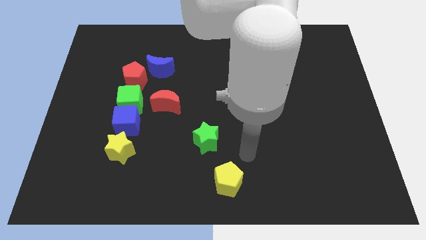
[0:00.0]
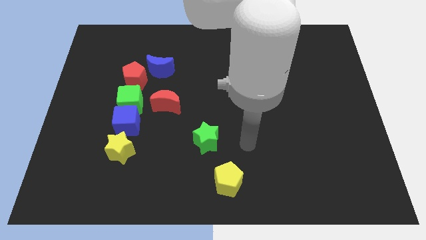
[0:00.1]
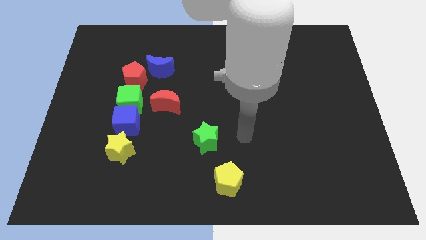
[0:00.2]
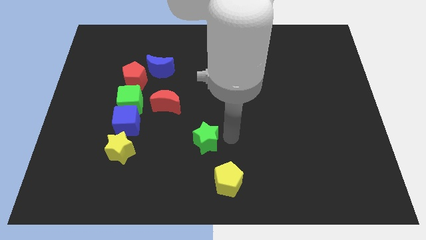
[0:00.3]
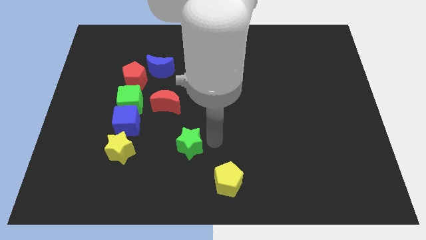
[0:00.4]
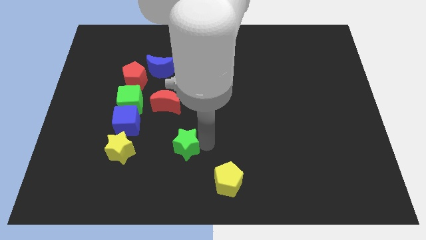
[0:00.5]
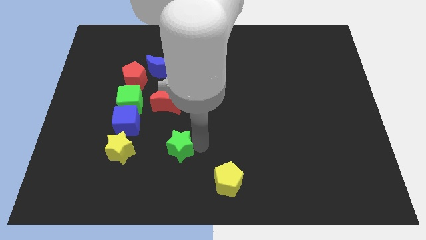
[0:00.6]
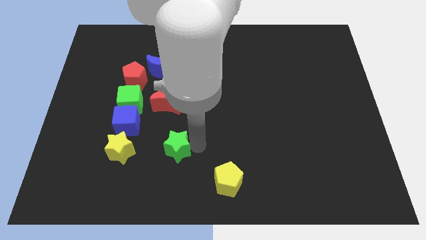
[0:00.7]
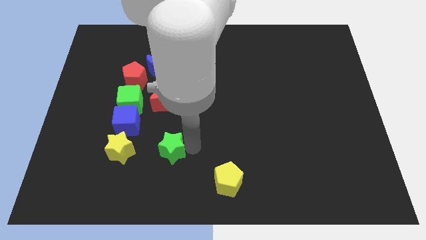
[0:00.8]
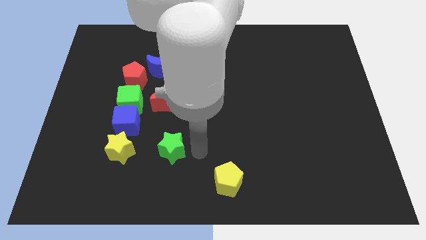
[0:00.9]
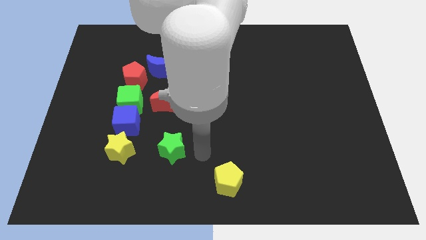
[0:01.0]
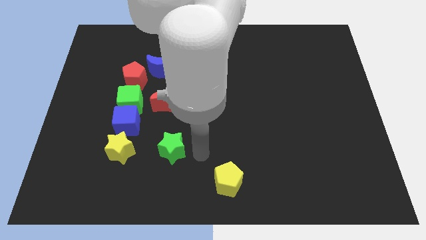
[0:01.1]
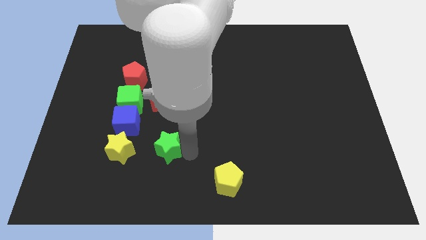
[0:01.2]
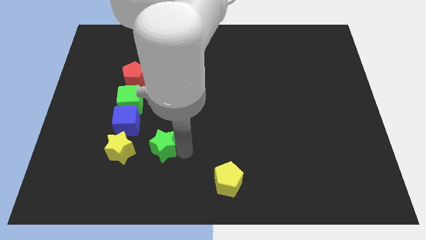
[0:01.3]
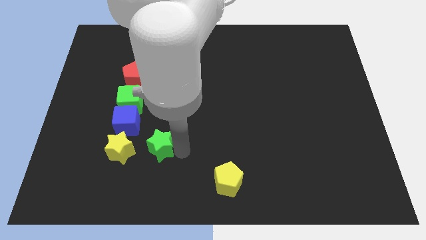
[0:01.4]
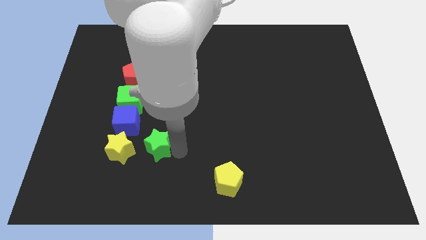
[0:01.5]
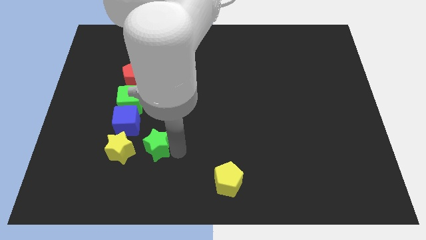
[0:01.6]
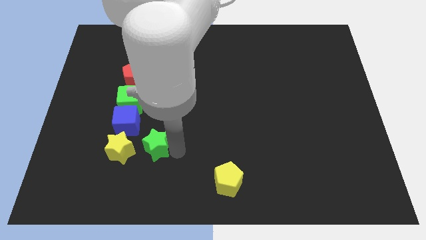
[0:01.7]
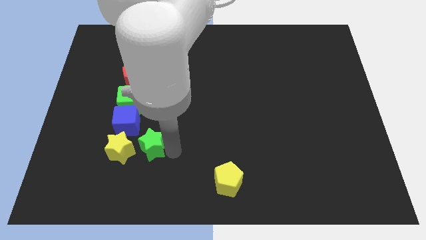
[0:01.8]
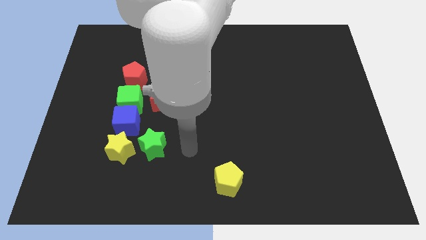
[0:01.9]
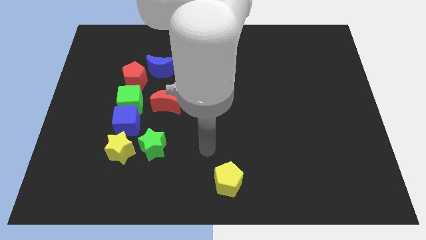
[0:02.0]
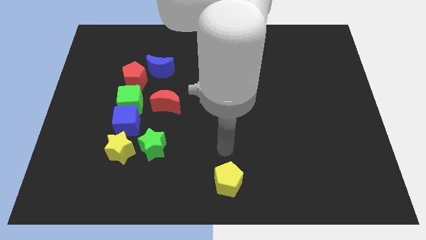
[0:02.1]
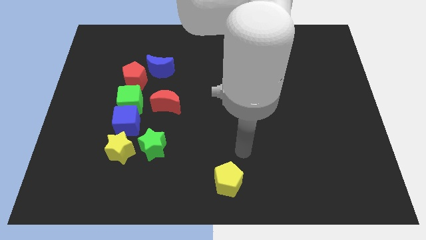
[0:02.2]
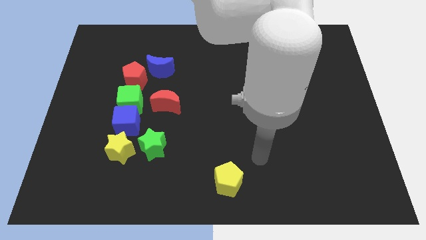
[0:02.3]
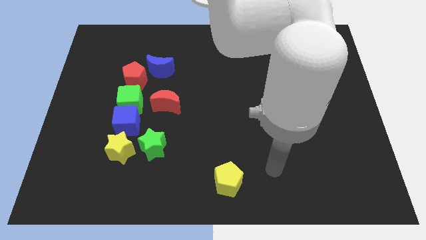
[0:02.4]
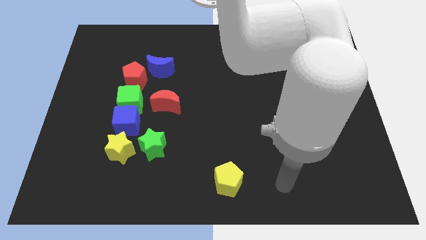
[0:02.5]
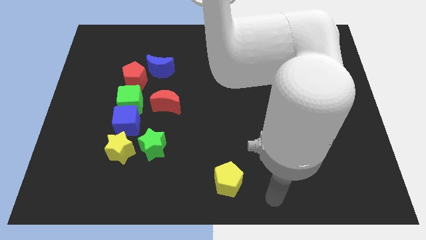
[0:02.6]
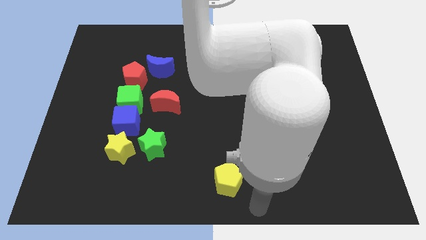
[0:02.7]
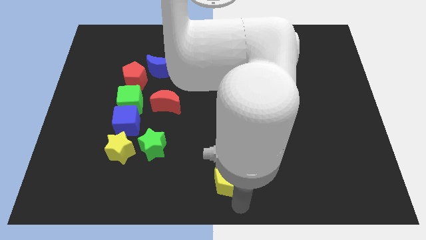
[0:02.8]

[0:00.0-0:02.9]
place the green star to the right of the yellow star

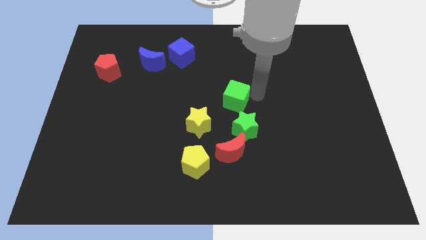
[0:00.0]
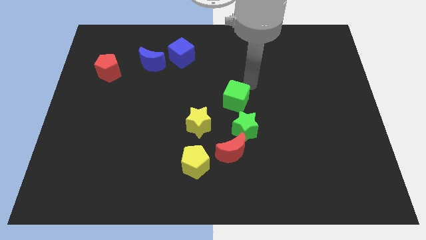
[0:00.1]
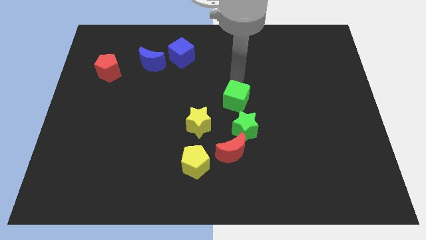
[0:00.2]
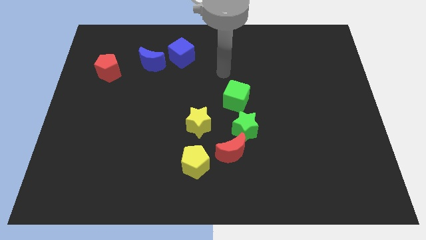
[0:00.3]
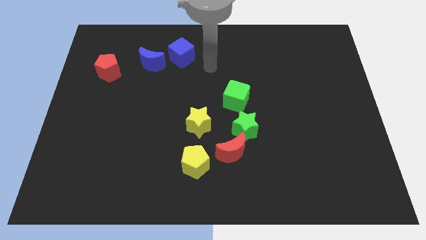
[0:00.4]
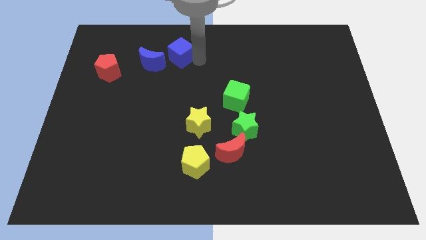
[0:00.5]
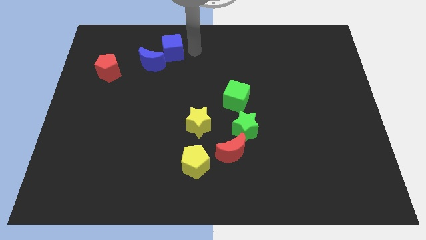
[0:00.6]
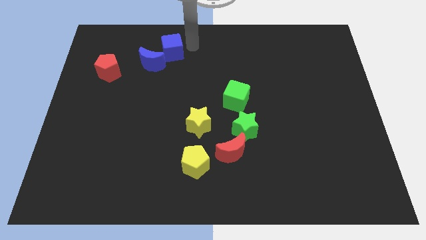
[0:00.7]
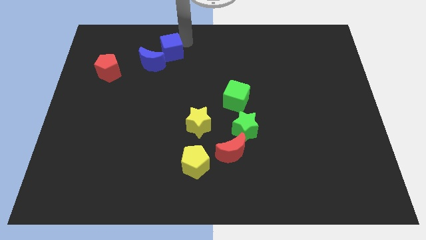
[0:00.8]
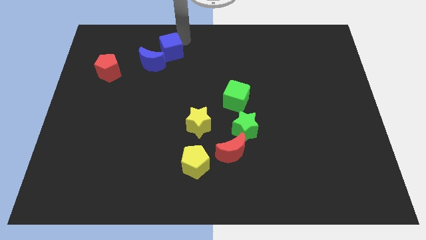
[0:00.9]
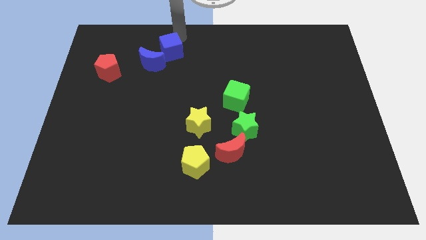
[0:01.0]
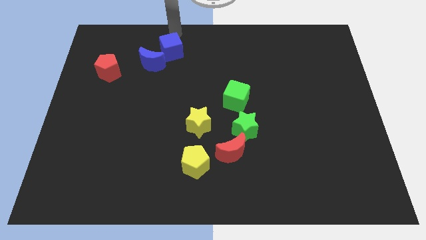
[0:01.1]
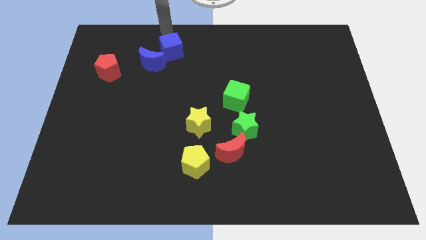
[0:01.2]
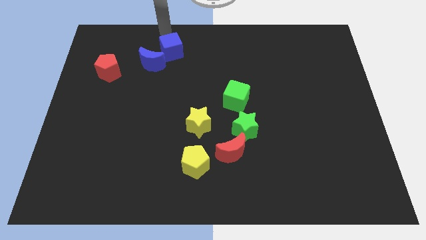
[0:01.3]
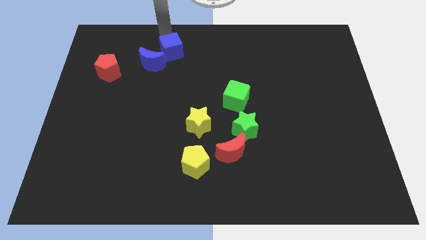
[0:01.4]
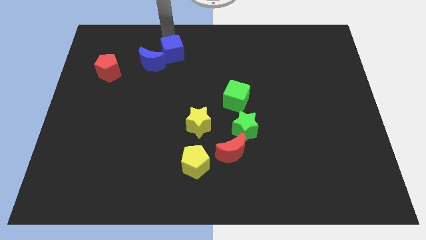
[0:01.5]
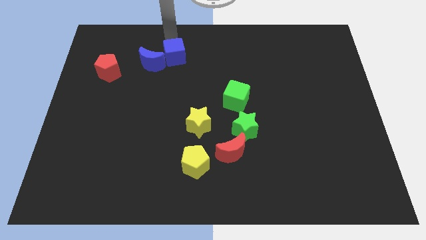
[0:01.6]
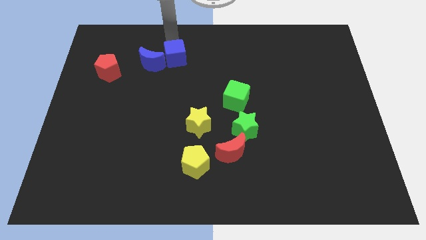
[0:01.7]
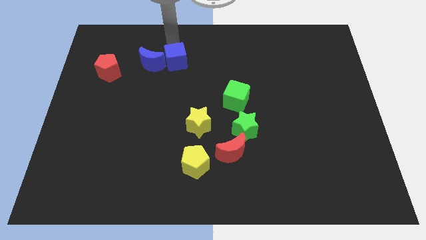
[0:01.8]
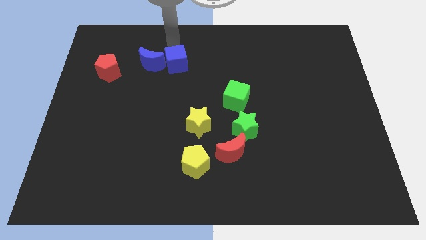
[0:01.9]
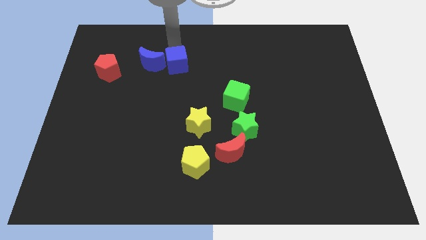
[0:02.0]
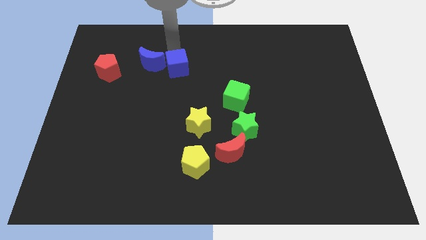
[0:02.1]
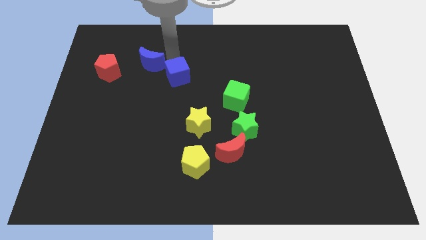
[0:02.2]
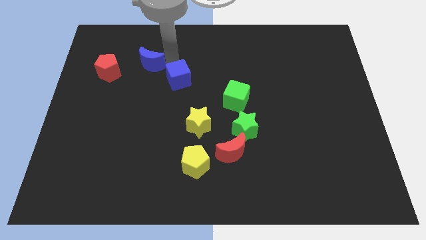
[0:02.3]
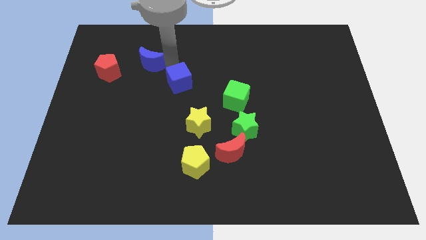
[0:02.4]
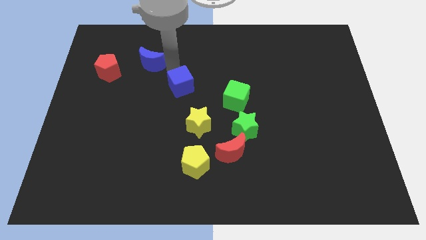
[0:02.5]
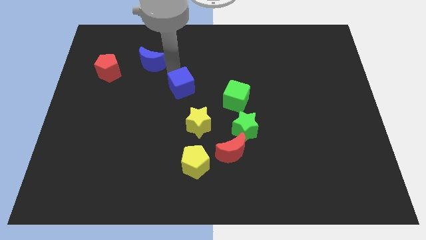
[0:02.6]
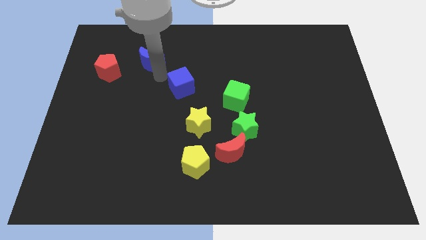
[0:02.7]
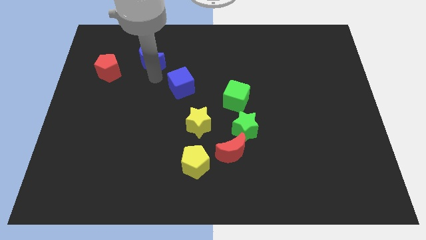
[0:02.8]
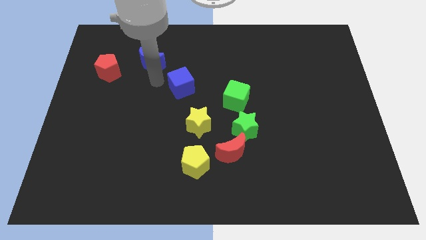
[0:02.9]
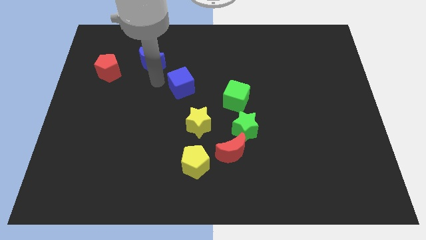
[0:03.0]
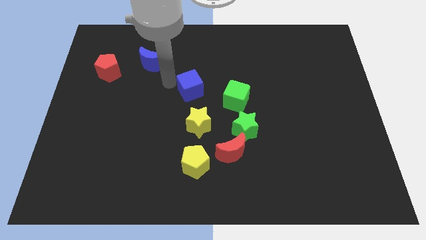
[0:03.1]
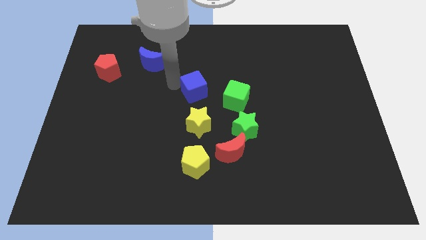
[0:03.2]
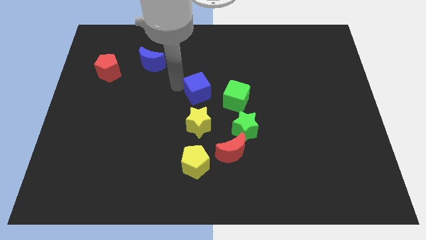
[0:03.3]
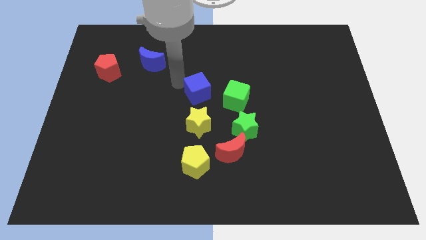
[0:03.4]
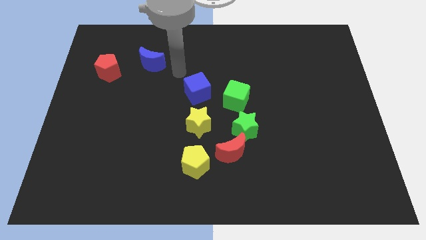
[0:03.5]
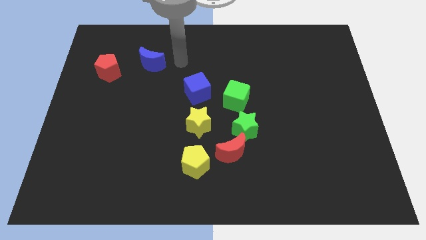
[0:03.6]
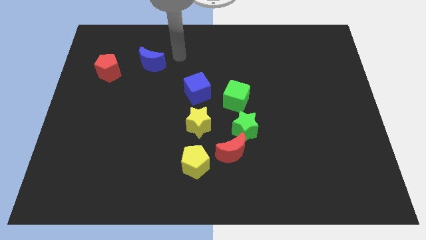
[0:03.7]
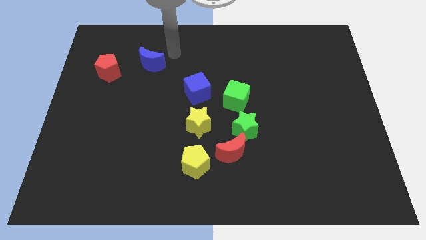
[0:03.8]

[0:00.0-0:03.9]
place the blue cube above the yellow star

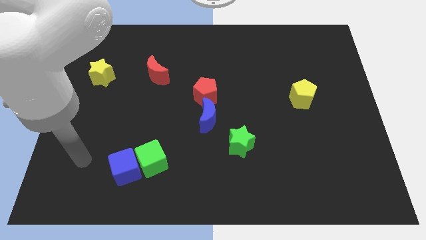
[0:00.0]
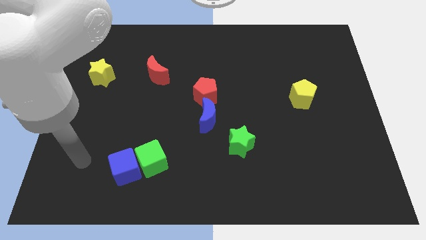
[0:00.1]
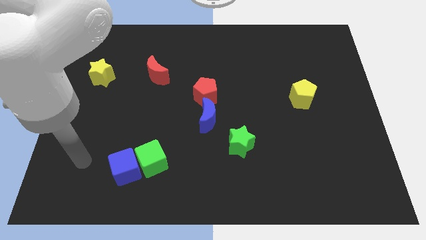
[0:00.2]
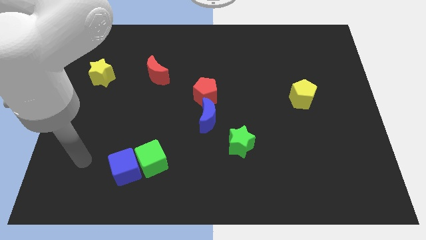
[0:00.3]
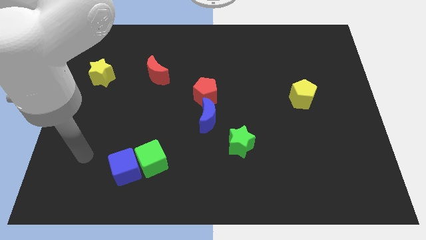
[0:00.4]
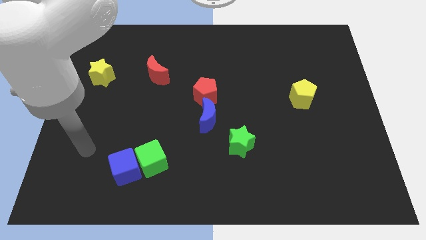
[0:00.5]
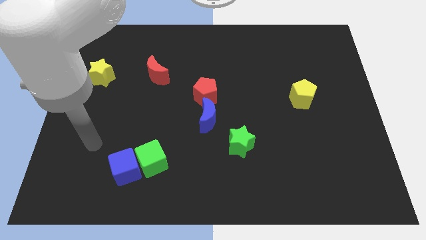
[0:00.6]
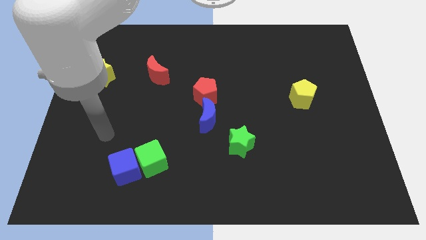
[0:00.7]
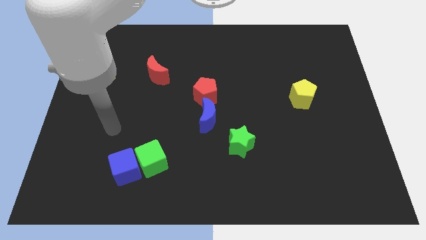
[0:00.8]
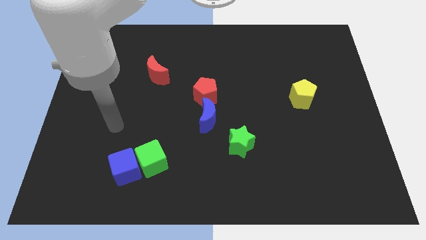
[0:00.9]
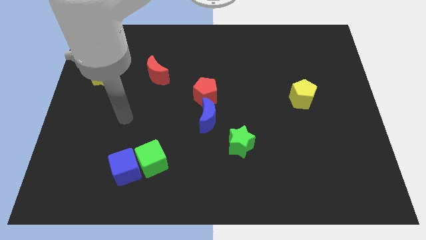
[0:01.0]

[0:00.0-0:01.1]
point your arm at the top of the blue cube

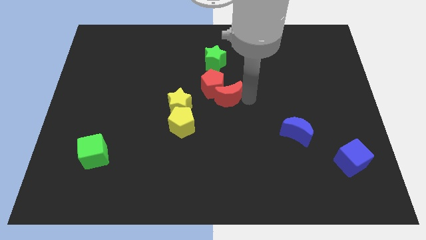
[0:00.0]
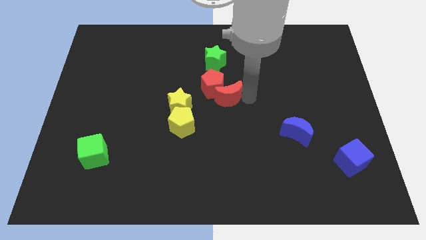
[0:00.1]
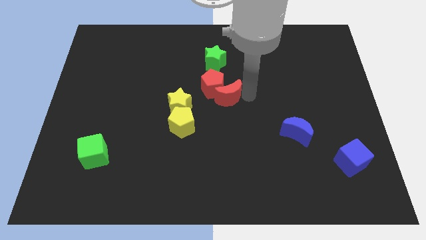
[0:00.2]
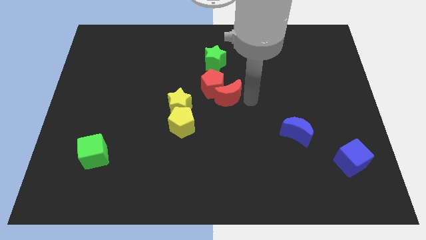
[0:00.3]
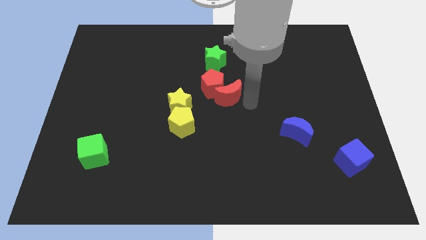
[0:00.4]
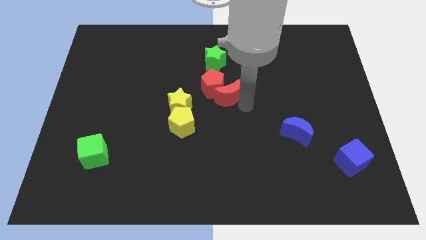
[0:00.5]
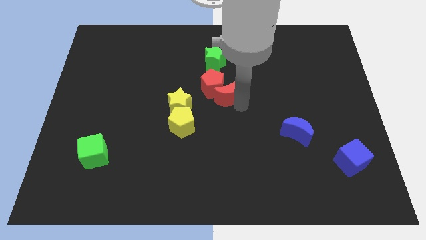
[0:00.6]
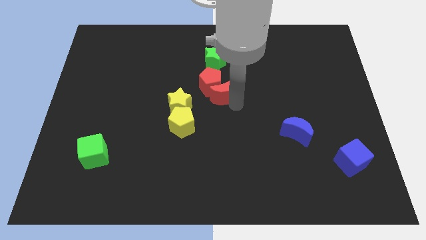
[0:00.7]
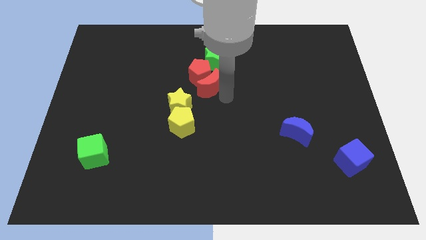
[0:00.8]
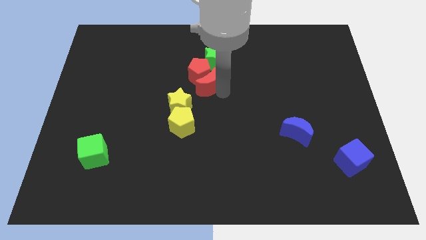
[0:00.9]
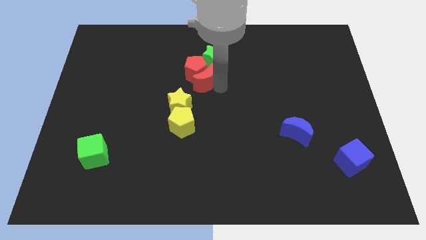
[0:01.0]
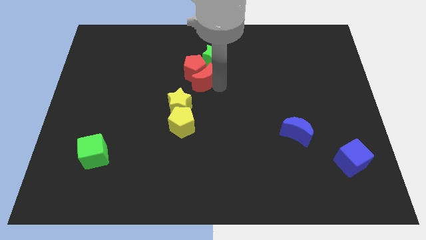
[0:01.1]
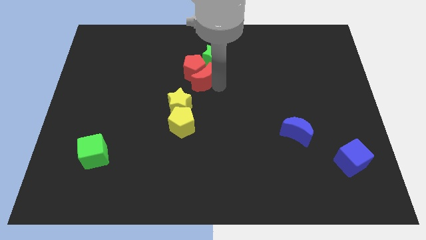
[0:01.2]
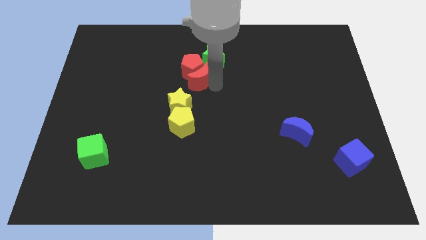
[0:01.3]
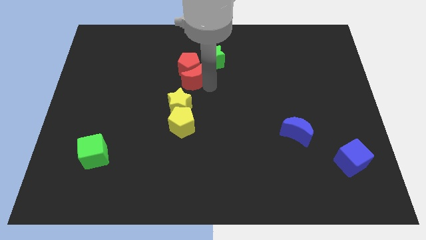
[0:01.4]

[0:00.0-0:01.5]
slide the red blocks into the green star
